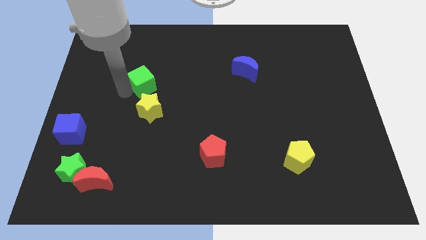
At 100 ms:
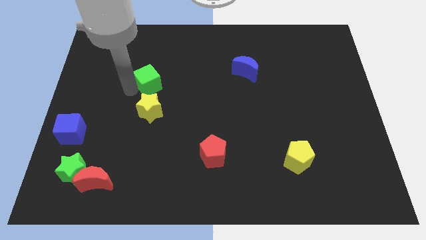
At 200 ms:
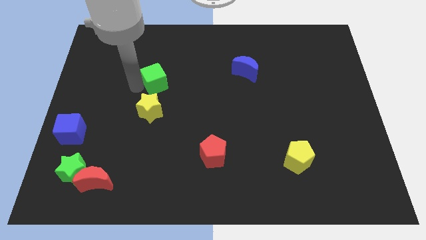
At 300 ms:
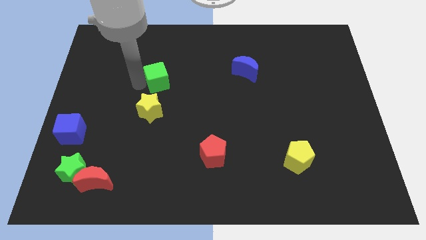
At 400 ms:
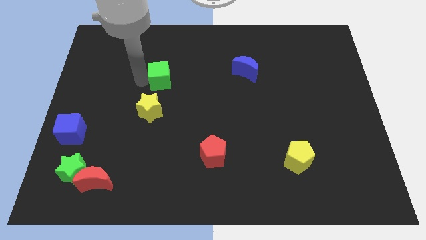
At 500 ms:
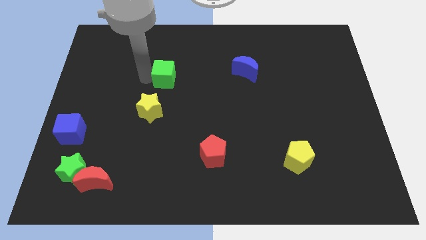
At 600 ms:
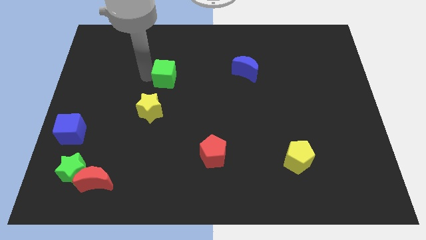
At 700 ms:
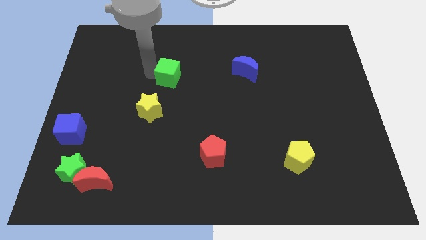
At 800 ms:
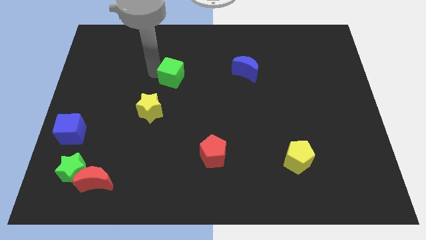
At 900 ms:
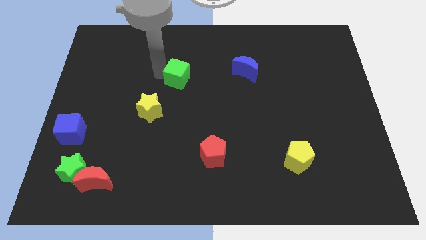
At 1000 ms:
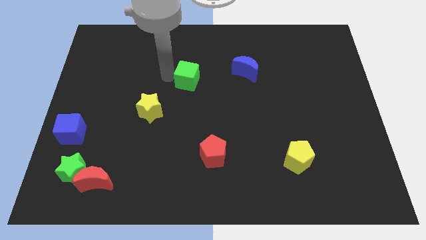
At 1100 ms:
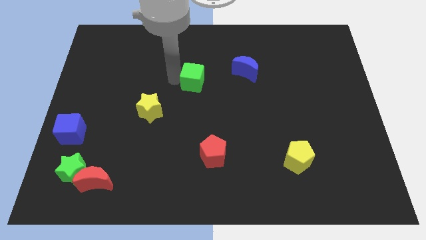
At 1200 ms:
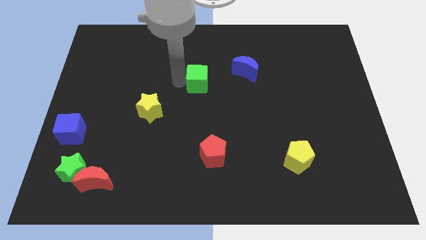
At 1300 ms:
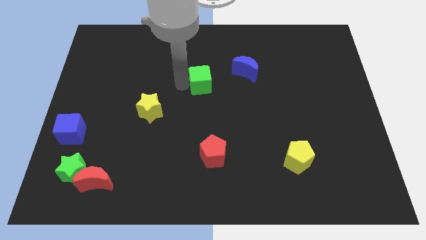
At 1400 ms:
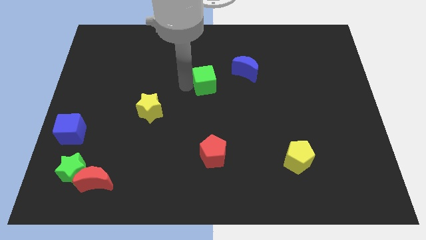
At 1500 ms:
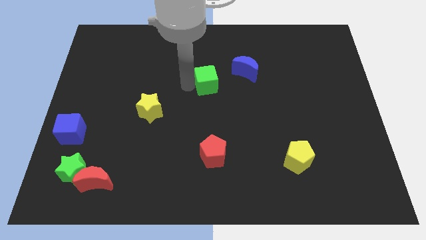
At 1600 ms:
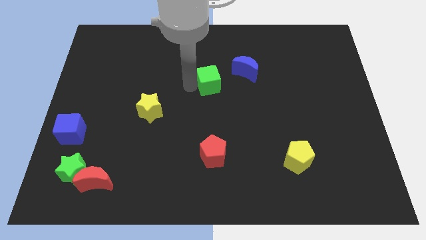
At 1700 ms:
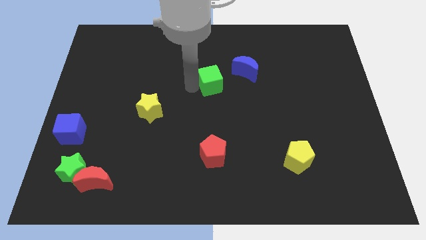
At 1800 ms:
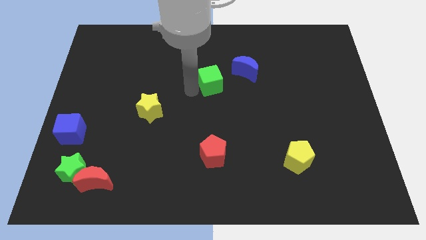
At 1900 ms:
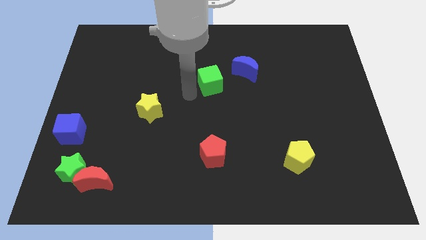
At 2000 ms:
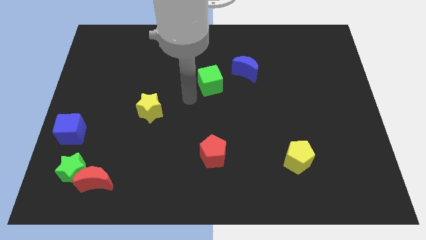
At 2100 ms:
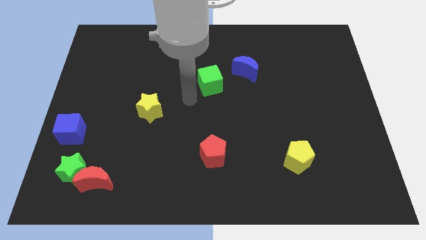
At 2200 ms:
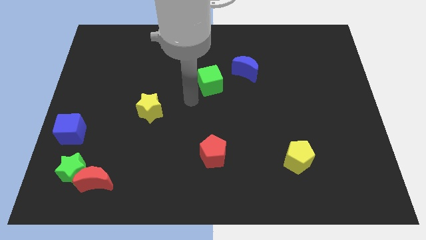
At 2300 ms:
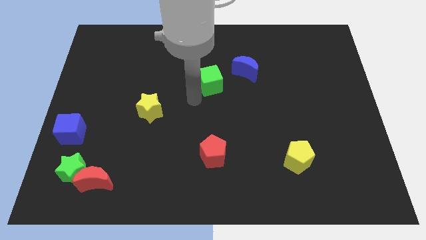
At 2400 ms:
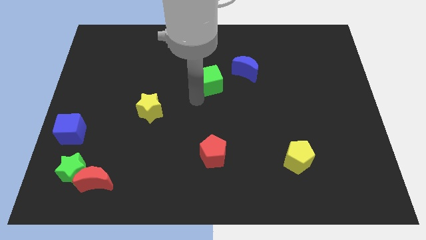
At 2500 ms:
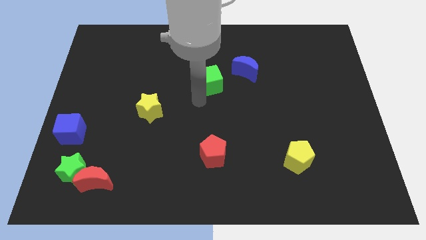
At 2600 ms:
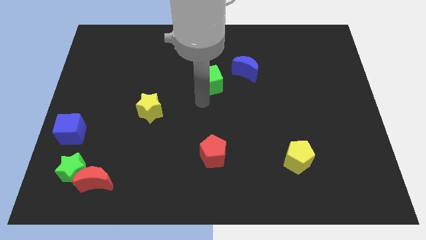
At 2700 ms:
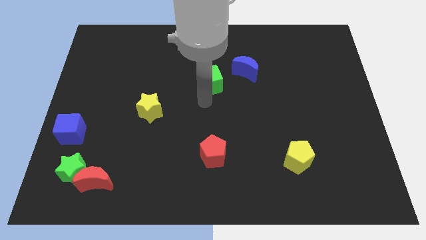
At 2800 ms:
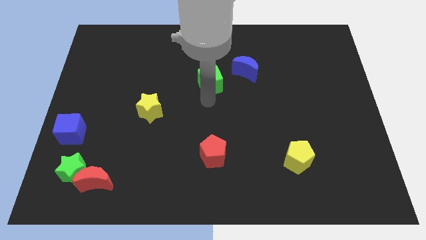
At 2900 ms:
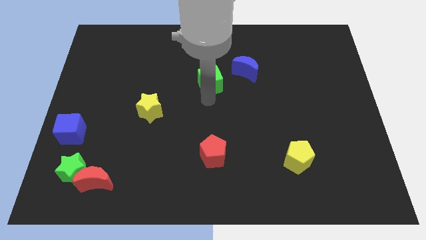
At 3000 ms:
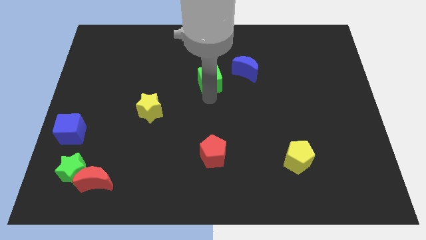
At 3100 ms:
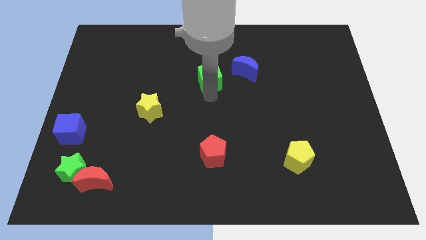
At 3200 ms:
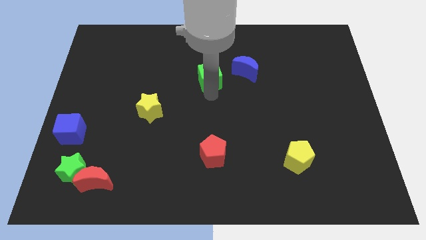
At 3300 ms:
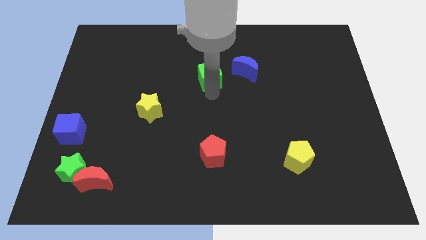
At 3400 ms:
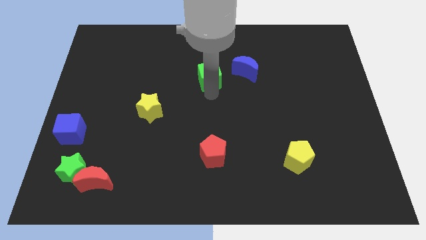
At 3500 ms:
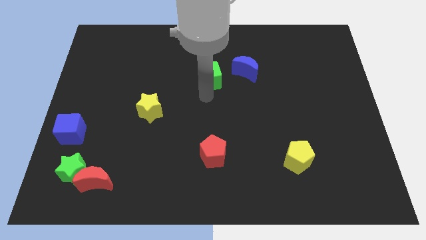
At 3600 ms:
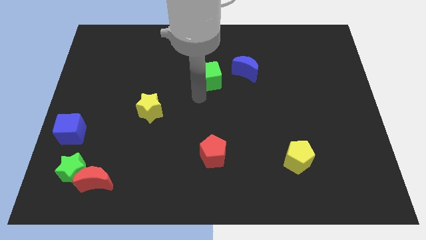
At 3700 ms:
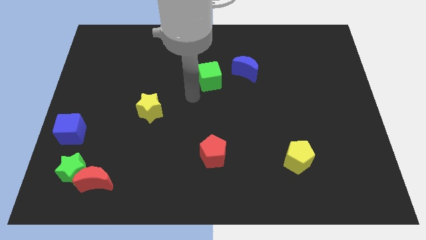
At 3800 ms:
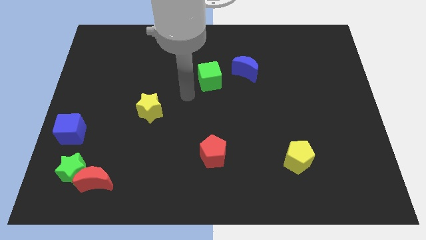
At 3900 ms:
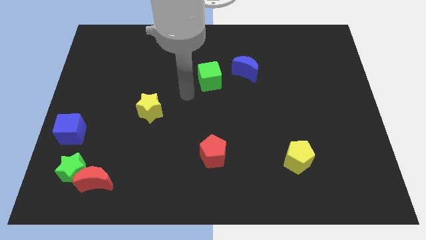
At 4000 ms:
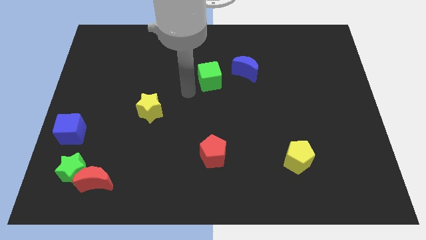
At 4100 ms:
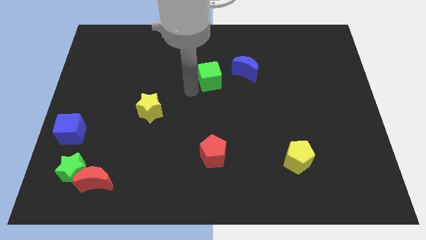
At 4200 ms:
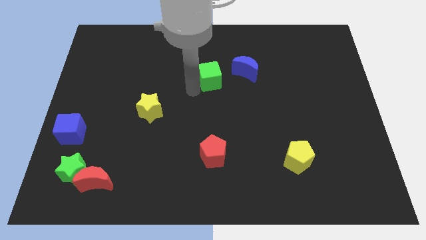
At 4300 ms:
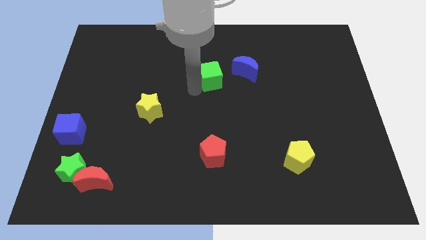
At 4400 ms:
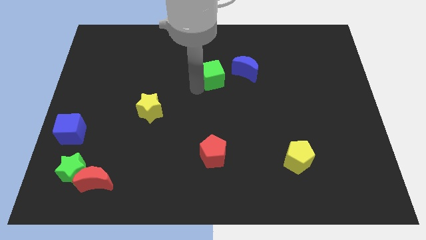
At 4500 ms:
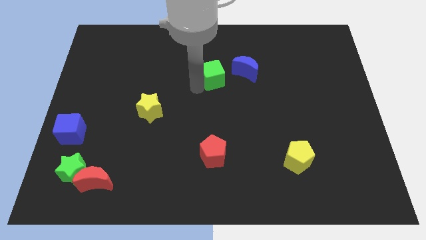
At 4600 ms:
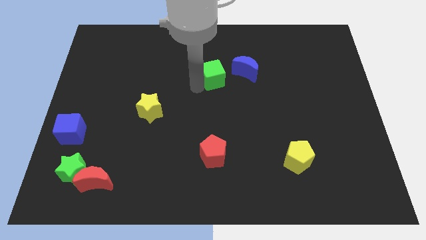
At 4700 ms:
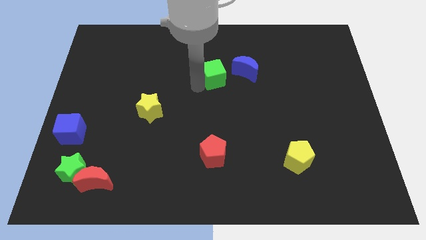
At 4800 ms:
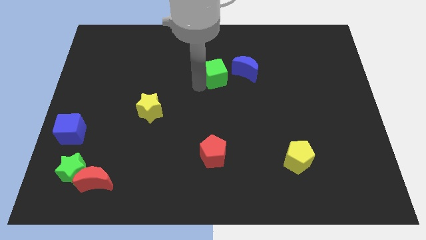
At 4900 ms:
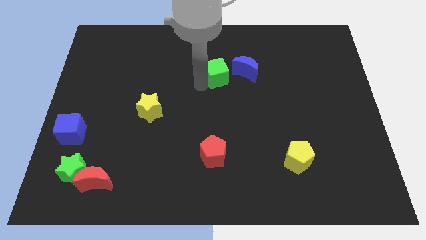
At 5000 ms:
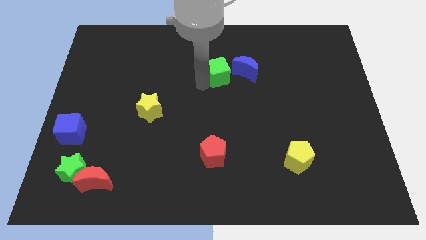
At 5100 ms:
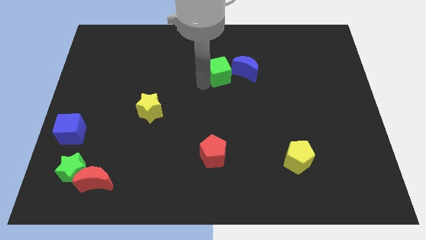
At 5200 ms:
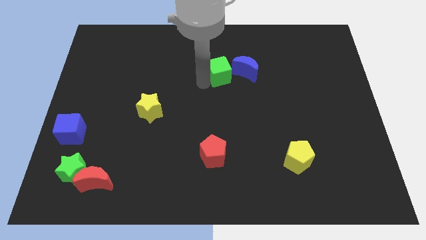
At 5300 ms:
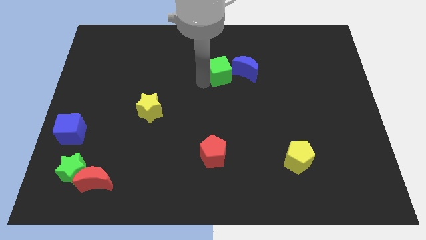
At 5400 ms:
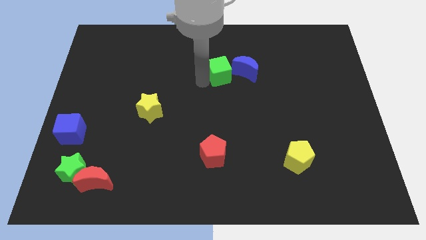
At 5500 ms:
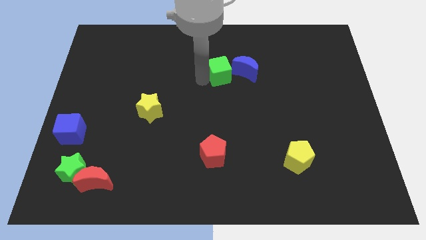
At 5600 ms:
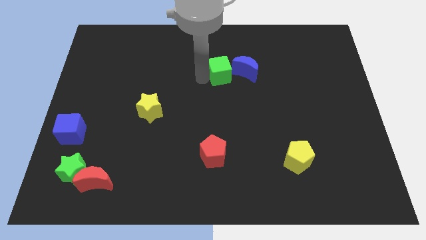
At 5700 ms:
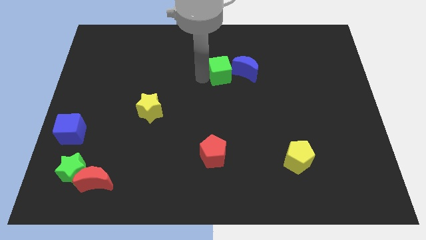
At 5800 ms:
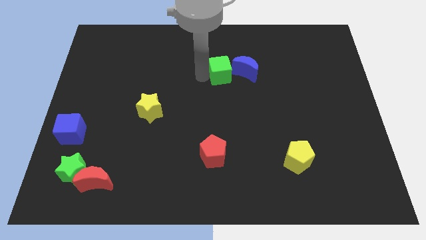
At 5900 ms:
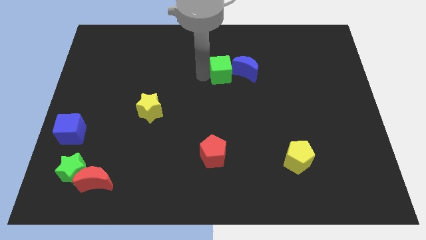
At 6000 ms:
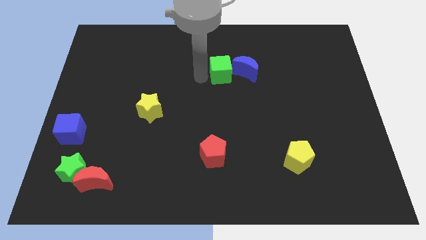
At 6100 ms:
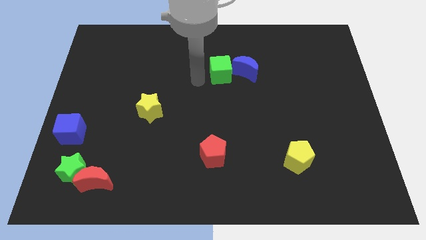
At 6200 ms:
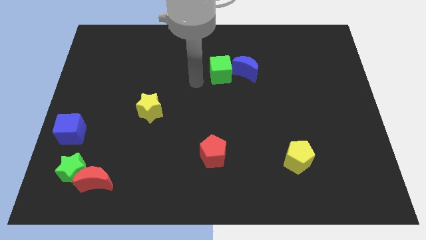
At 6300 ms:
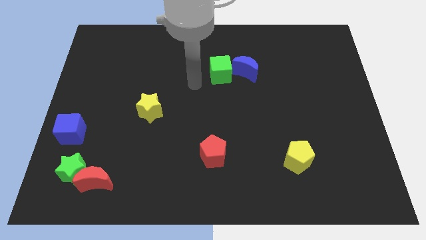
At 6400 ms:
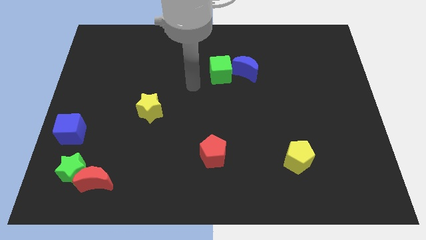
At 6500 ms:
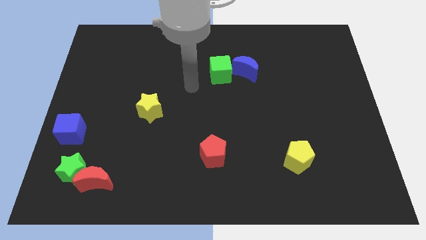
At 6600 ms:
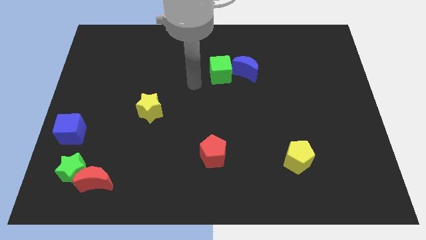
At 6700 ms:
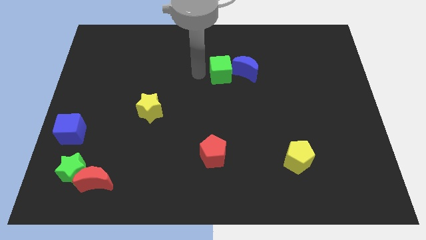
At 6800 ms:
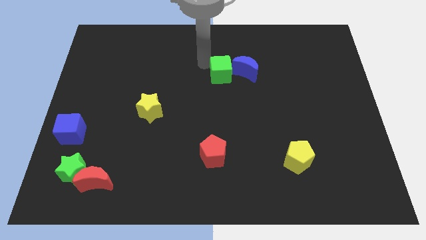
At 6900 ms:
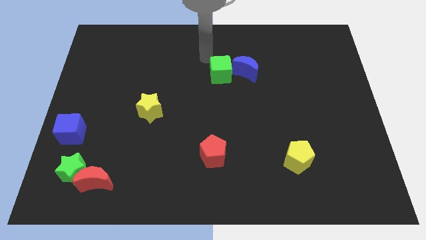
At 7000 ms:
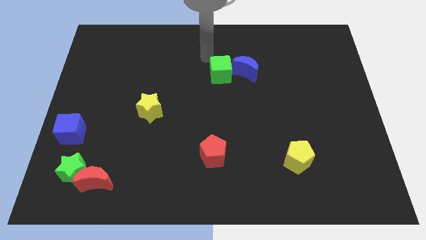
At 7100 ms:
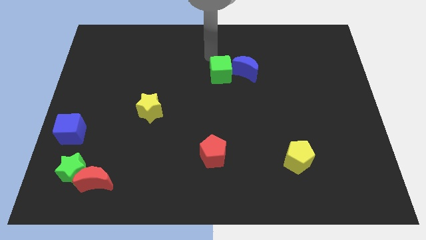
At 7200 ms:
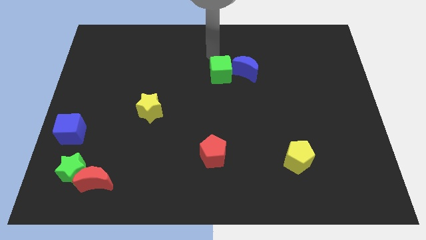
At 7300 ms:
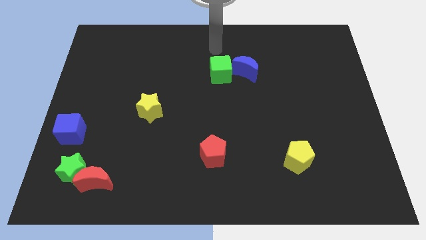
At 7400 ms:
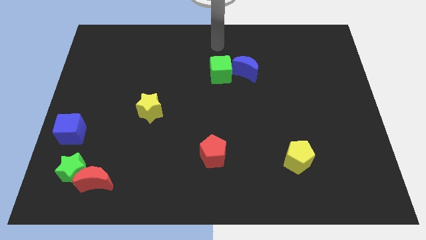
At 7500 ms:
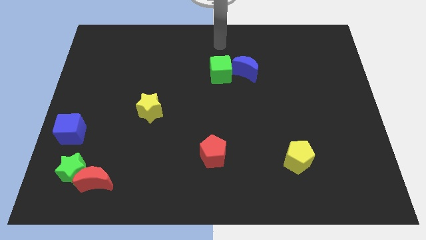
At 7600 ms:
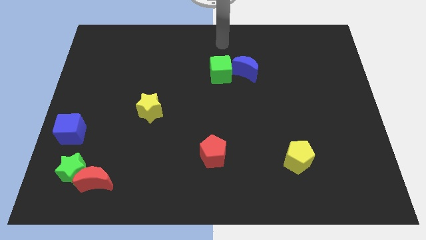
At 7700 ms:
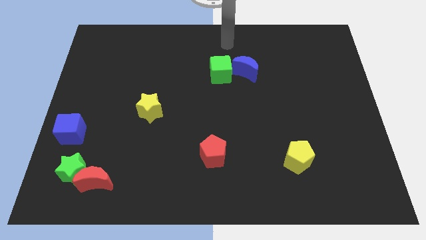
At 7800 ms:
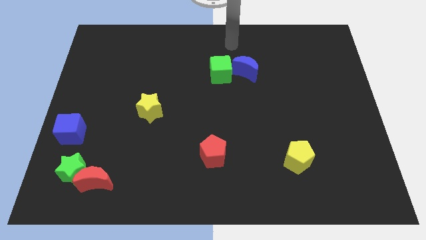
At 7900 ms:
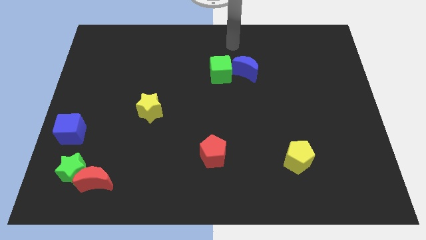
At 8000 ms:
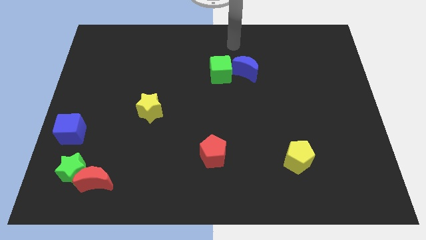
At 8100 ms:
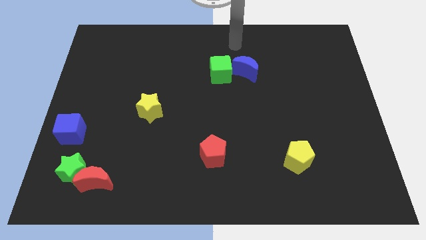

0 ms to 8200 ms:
move the green cube into the blue crescent

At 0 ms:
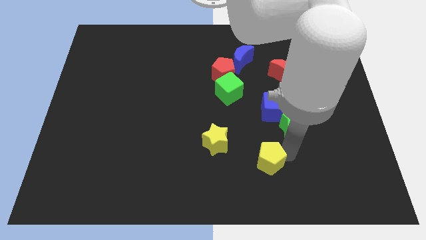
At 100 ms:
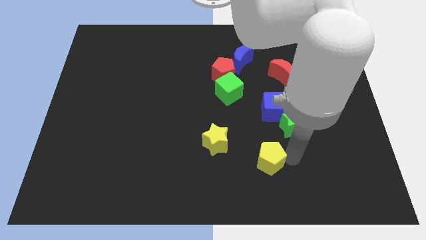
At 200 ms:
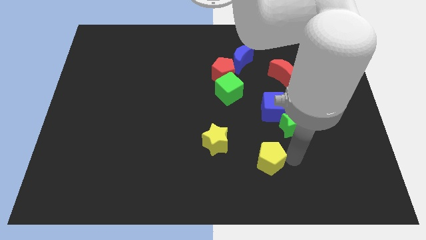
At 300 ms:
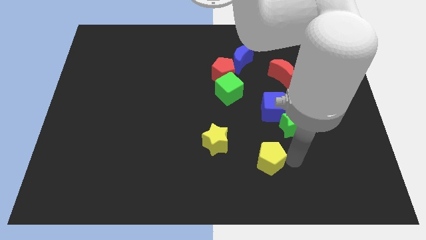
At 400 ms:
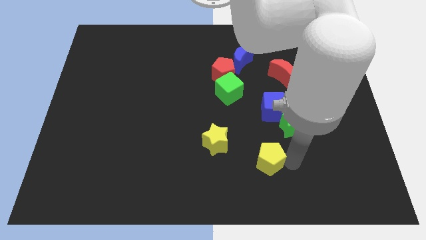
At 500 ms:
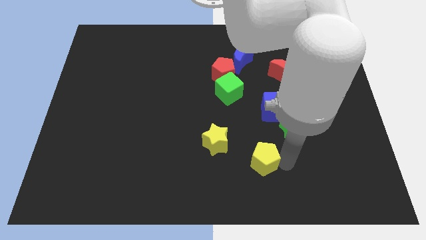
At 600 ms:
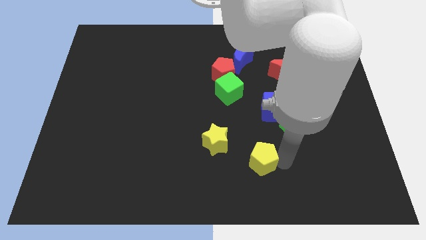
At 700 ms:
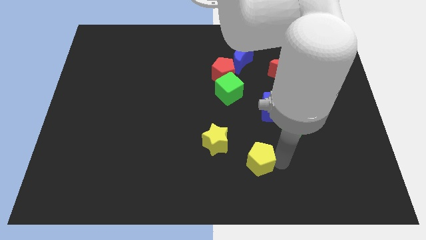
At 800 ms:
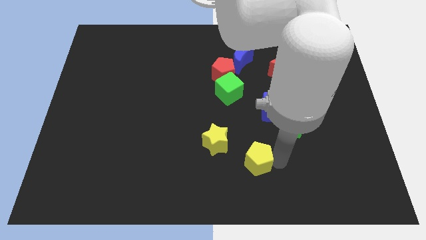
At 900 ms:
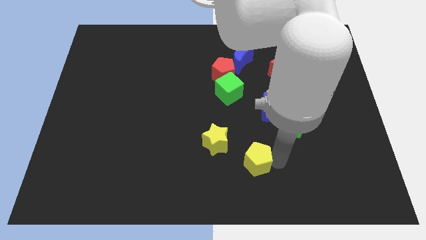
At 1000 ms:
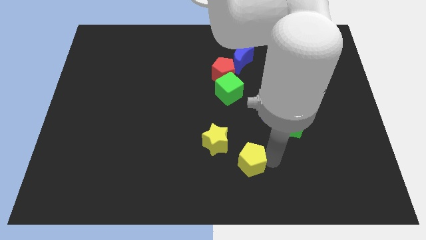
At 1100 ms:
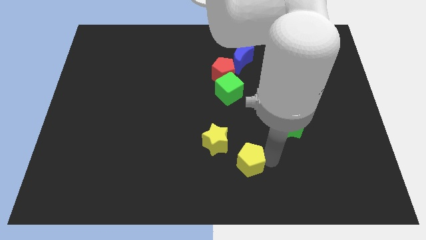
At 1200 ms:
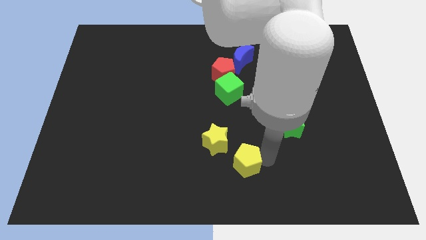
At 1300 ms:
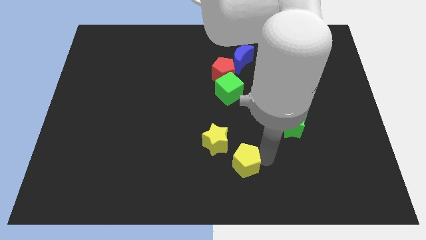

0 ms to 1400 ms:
slide the yellow pentagon close to the yellow star
